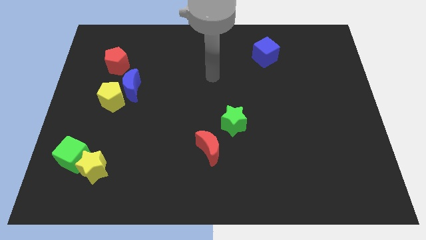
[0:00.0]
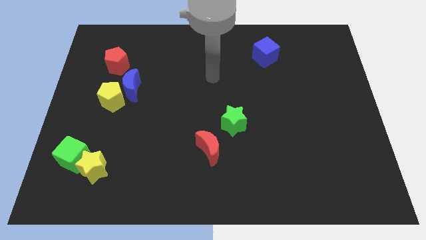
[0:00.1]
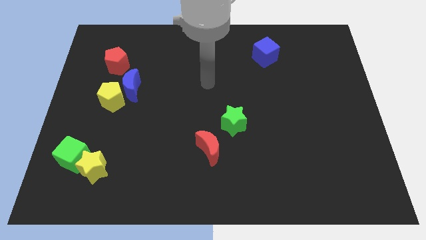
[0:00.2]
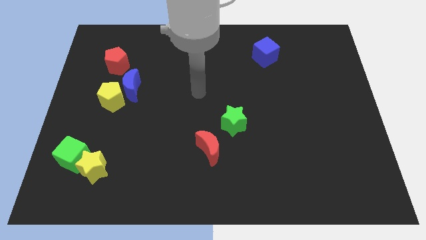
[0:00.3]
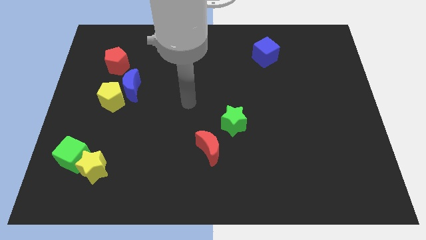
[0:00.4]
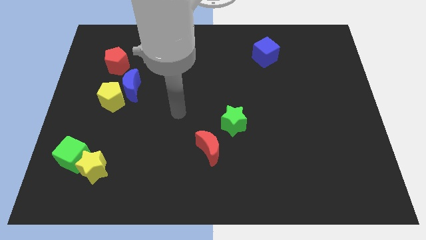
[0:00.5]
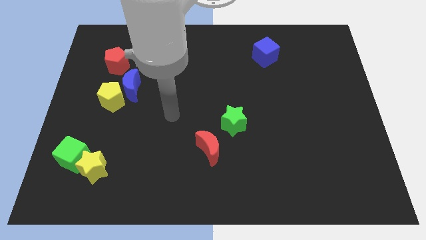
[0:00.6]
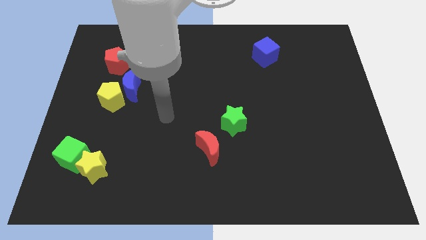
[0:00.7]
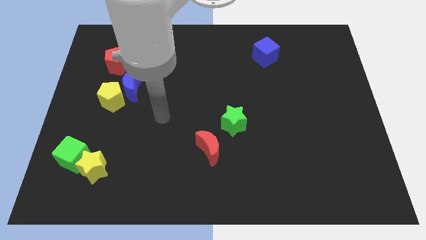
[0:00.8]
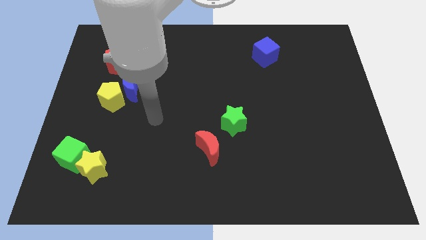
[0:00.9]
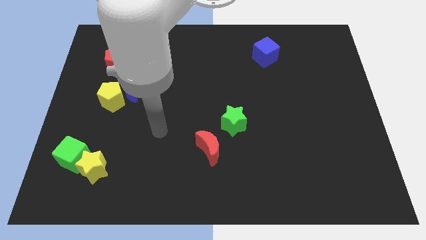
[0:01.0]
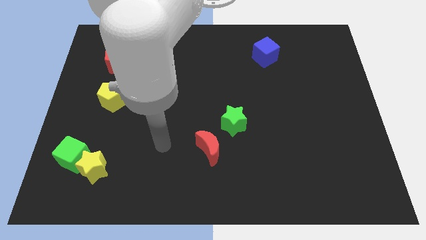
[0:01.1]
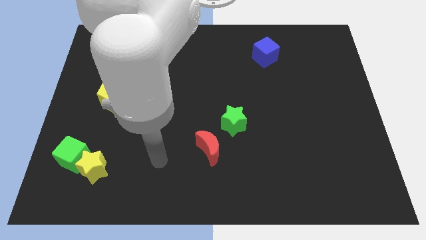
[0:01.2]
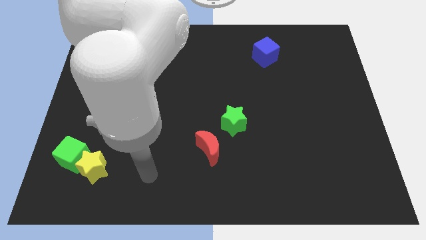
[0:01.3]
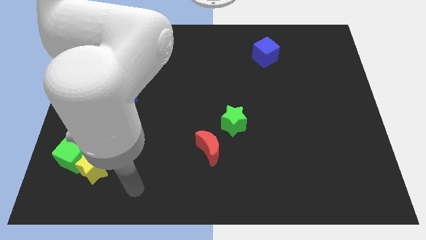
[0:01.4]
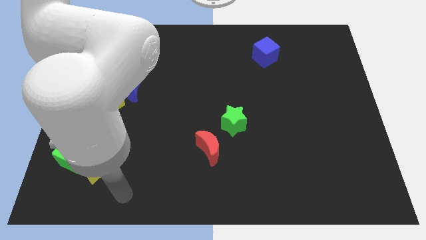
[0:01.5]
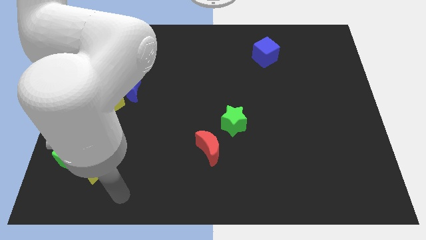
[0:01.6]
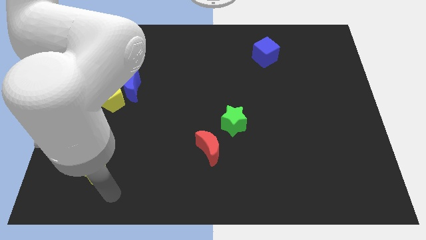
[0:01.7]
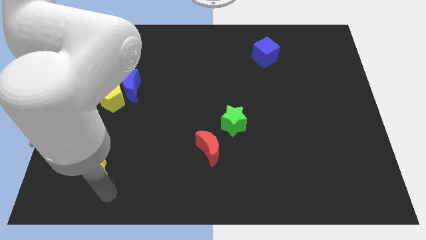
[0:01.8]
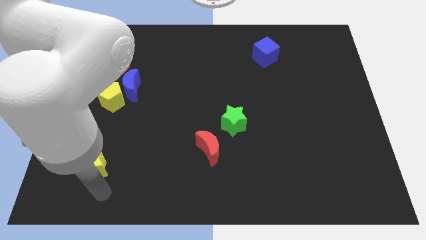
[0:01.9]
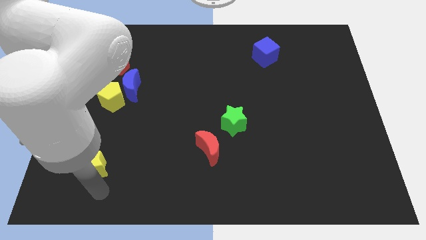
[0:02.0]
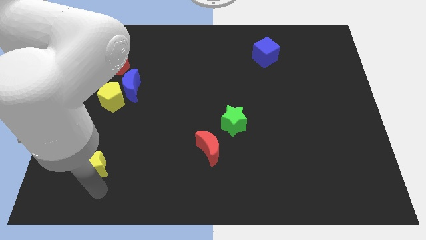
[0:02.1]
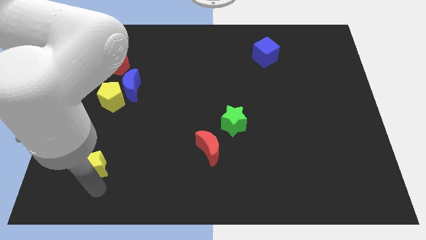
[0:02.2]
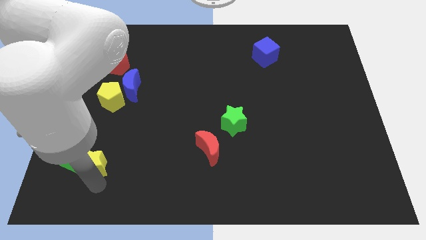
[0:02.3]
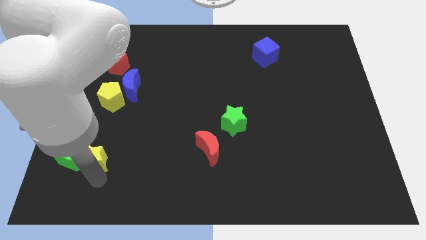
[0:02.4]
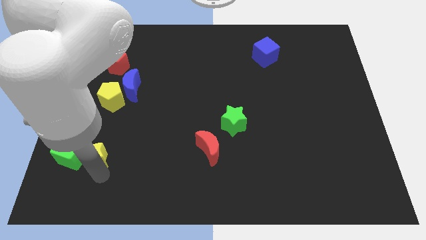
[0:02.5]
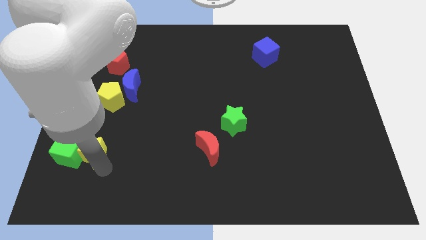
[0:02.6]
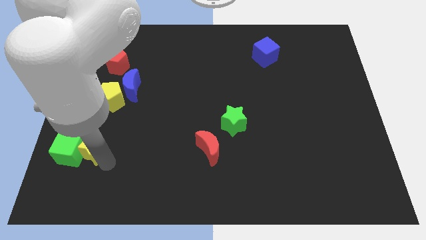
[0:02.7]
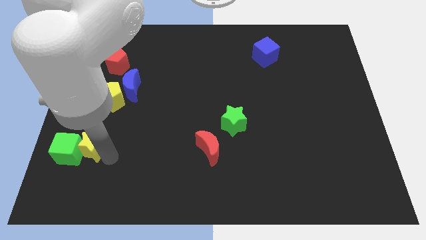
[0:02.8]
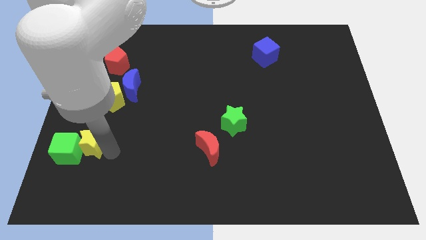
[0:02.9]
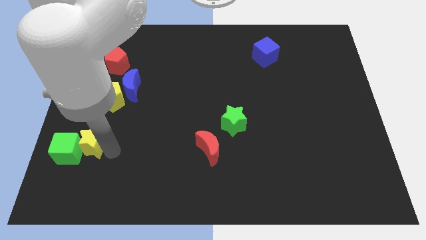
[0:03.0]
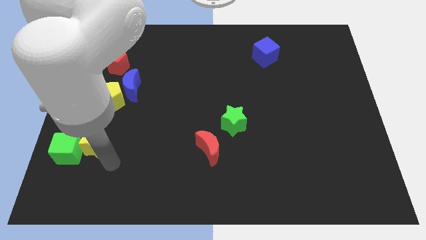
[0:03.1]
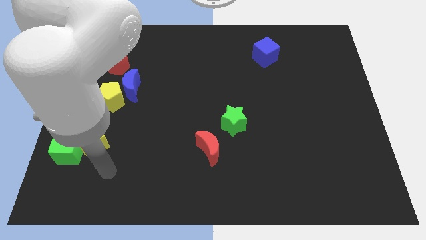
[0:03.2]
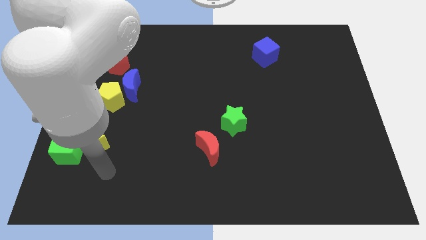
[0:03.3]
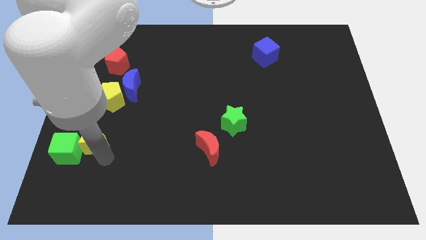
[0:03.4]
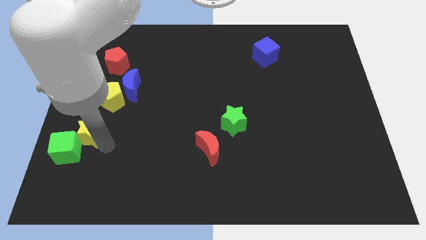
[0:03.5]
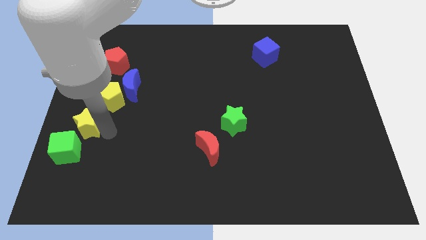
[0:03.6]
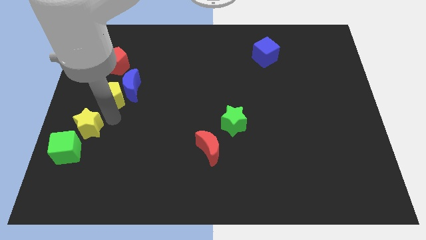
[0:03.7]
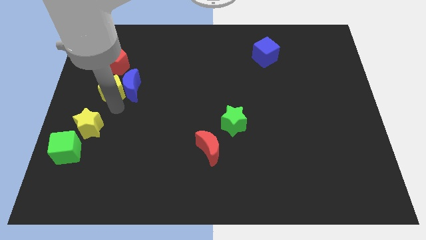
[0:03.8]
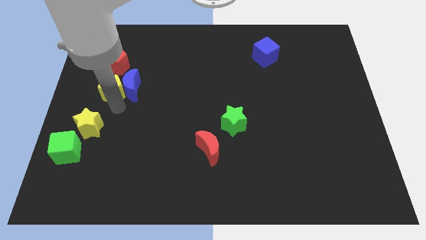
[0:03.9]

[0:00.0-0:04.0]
push the yellow star to the top right of the green cube

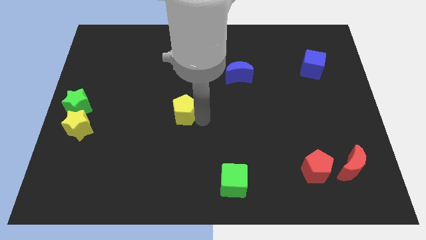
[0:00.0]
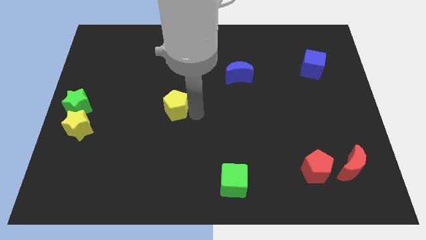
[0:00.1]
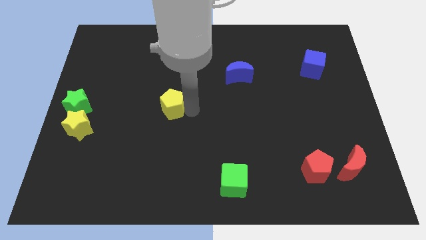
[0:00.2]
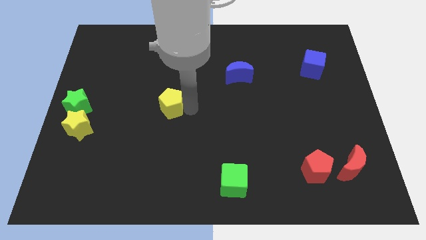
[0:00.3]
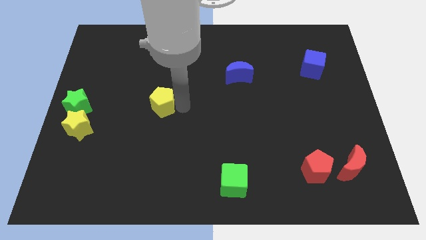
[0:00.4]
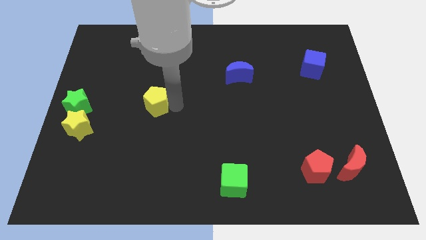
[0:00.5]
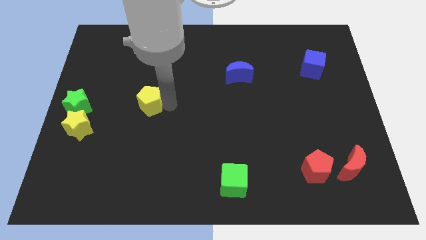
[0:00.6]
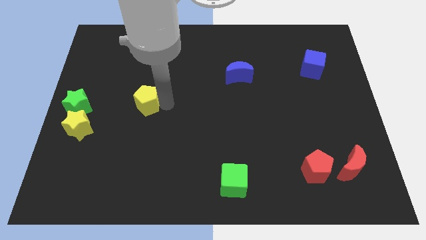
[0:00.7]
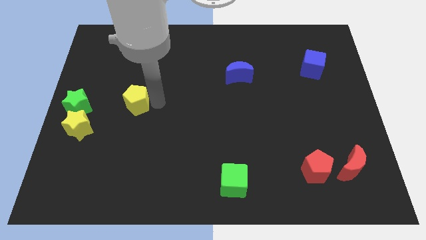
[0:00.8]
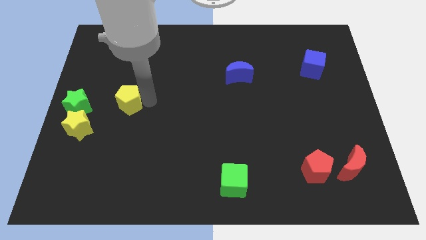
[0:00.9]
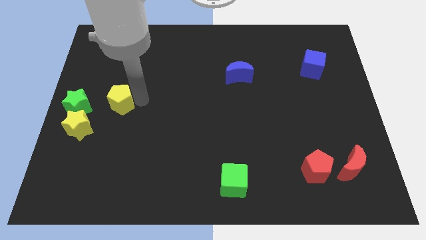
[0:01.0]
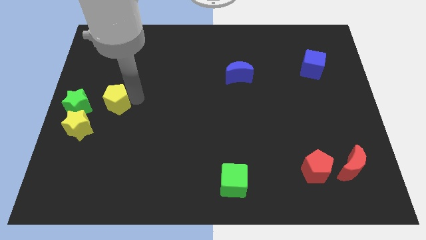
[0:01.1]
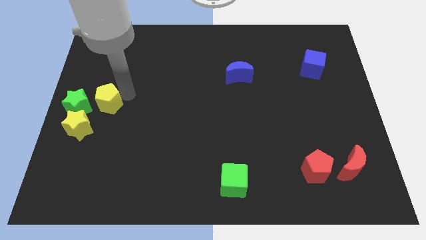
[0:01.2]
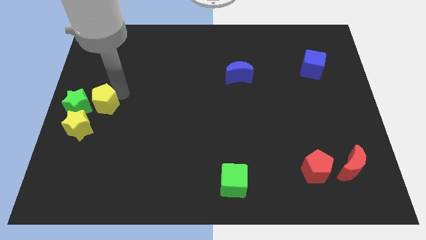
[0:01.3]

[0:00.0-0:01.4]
place yellow pentagon to the right of green star

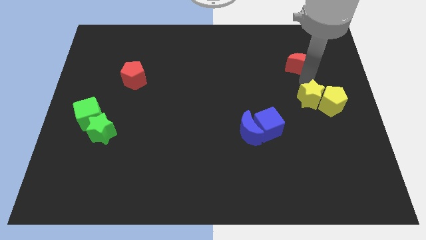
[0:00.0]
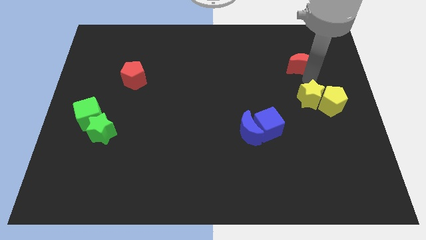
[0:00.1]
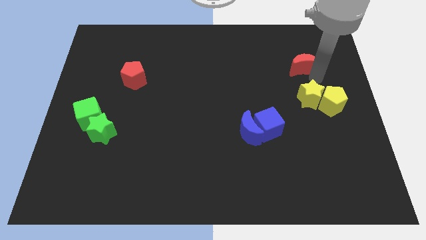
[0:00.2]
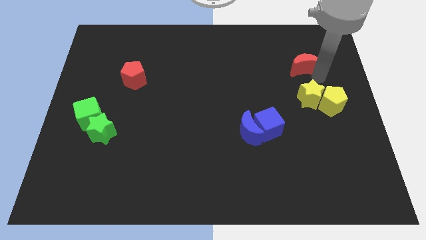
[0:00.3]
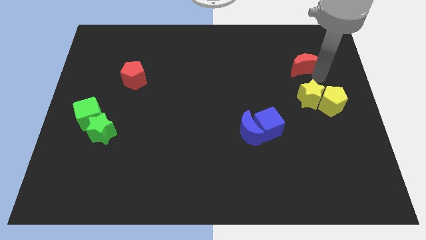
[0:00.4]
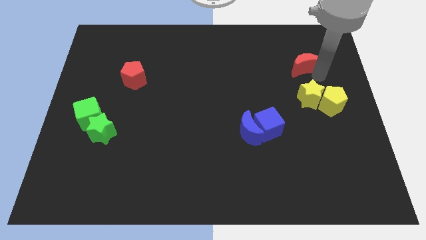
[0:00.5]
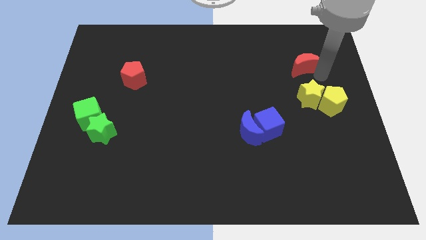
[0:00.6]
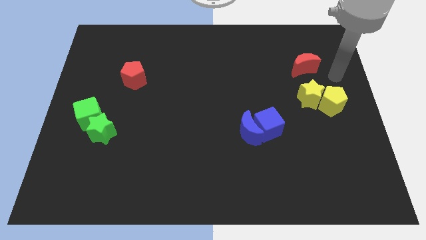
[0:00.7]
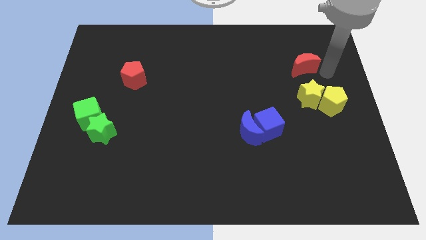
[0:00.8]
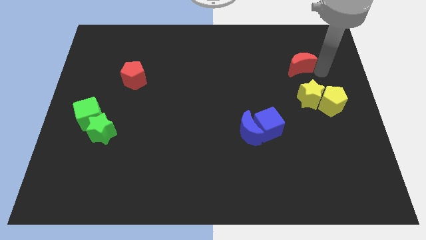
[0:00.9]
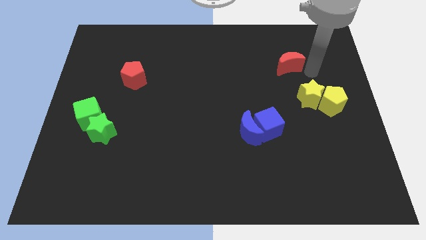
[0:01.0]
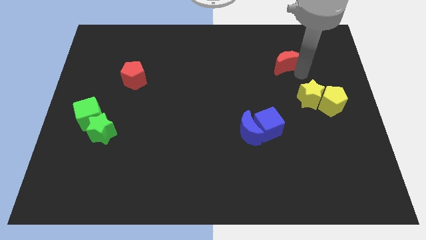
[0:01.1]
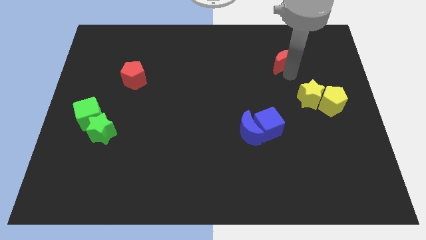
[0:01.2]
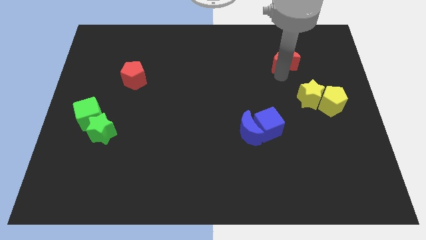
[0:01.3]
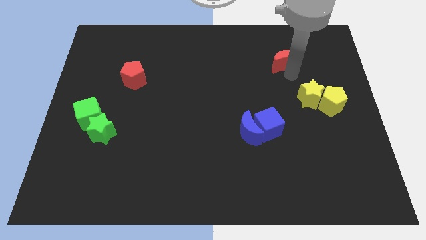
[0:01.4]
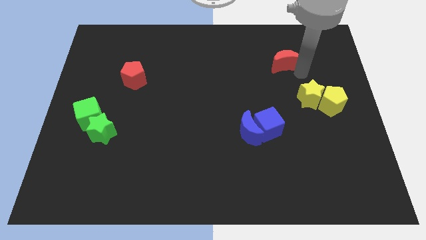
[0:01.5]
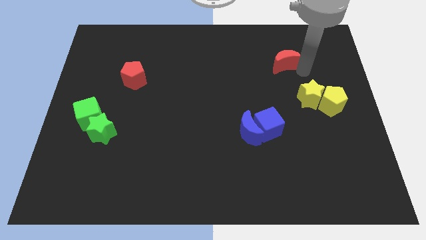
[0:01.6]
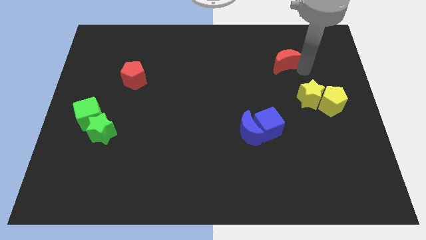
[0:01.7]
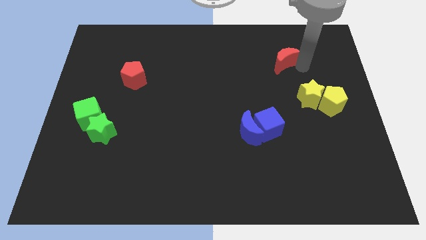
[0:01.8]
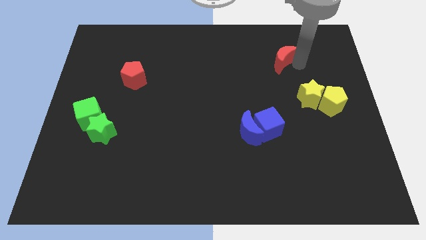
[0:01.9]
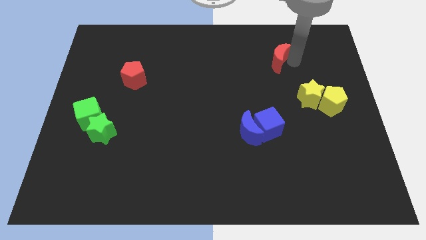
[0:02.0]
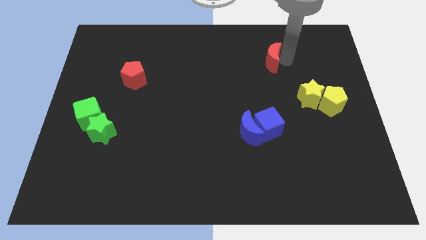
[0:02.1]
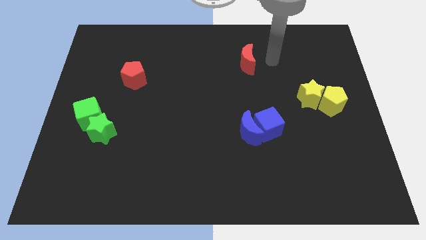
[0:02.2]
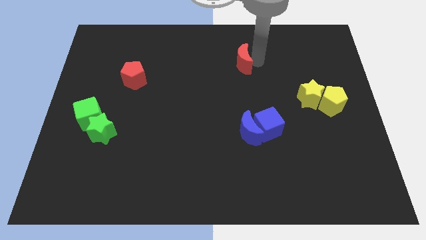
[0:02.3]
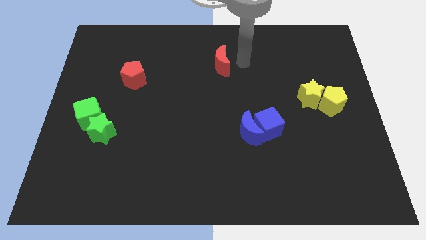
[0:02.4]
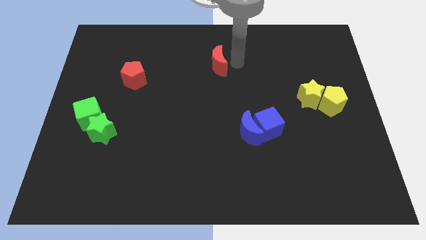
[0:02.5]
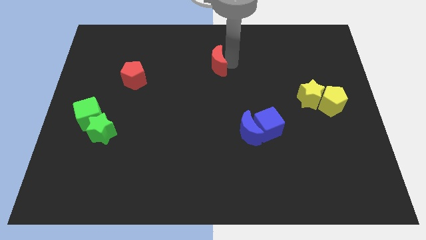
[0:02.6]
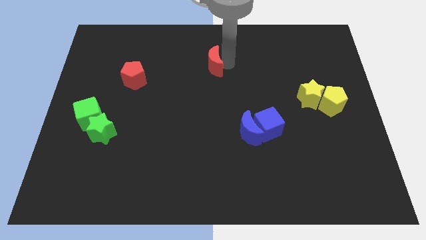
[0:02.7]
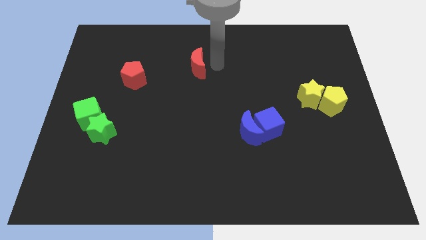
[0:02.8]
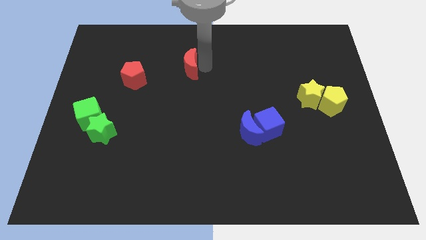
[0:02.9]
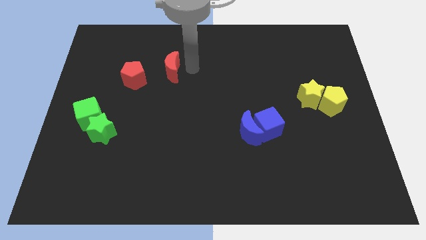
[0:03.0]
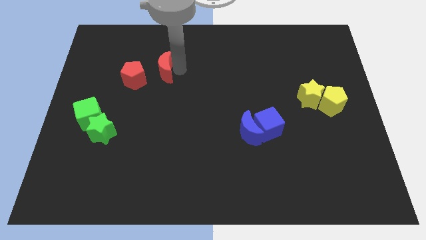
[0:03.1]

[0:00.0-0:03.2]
move the red crescent right to the red pentagon

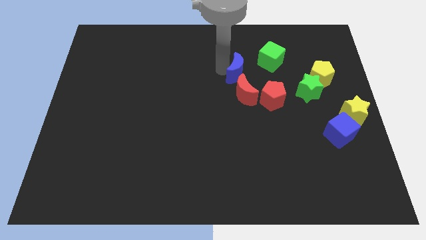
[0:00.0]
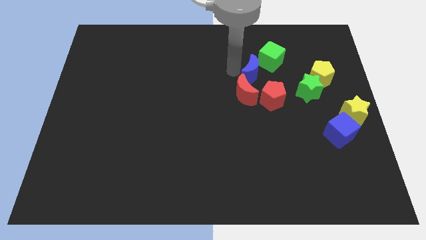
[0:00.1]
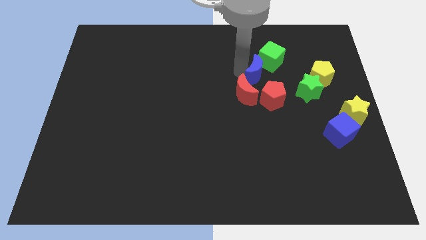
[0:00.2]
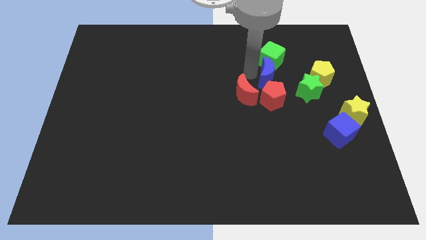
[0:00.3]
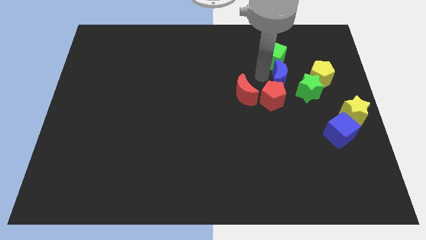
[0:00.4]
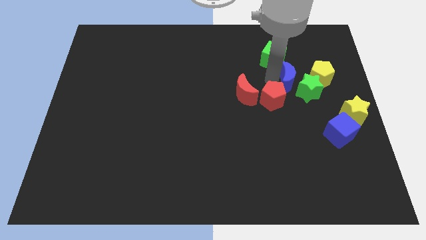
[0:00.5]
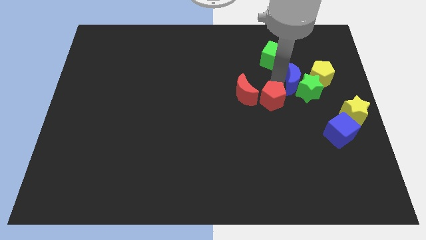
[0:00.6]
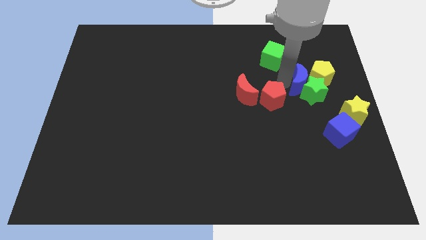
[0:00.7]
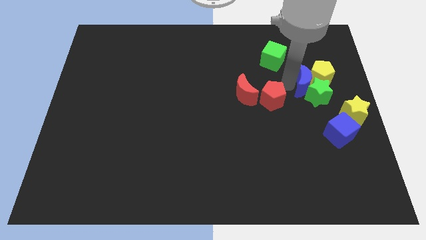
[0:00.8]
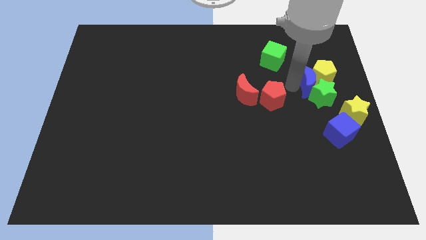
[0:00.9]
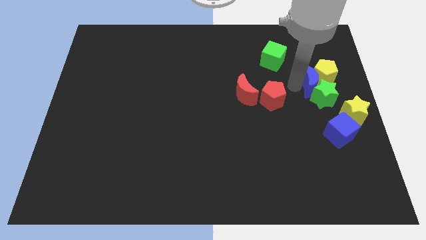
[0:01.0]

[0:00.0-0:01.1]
move the blue crescent left beside the yellow pentagon and green star
